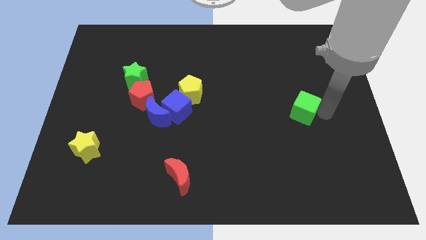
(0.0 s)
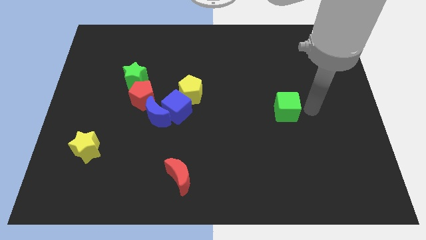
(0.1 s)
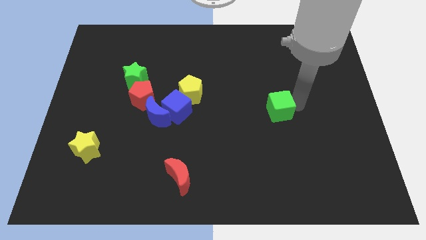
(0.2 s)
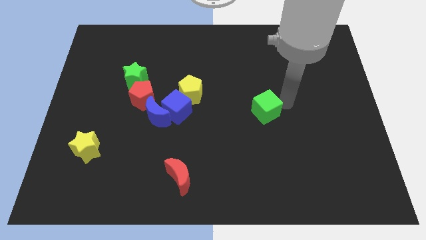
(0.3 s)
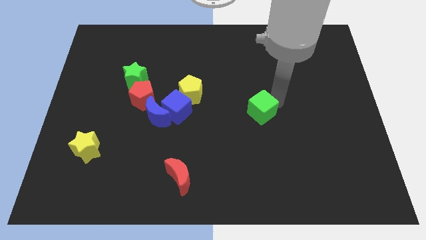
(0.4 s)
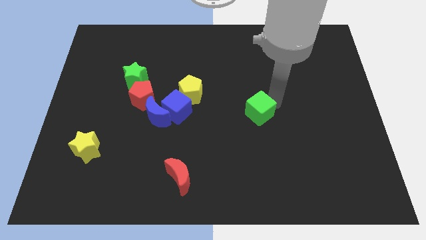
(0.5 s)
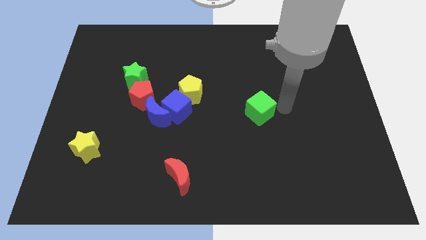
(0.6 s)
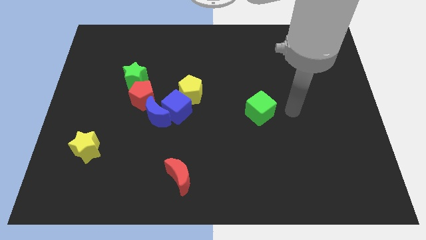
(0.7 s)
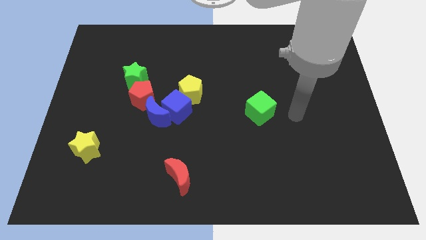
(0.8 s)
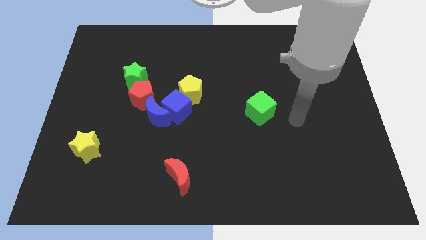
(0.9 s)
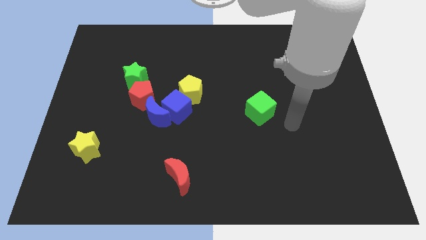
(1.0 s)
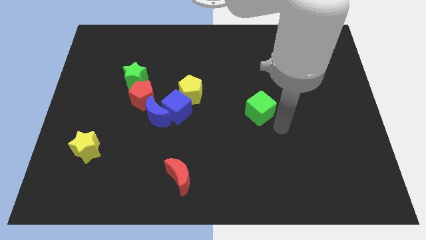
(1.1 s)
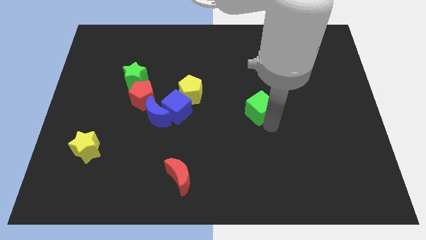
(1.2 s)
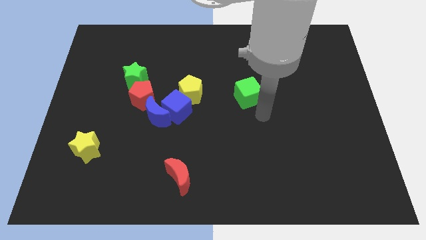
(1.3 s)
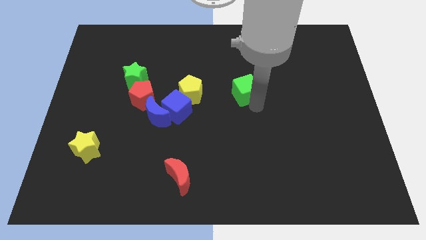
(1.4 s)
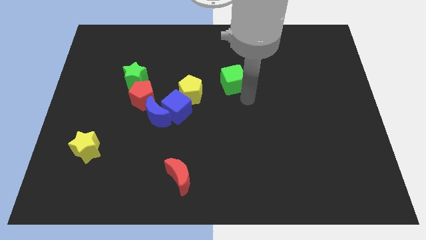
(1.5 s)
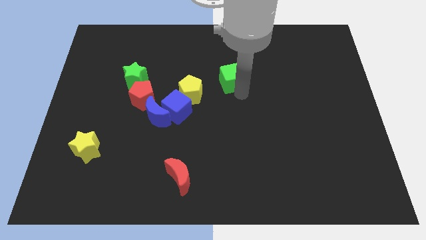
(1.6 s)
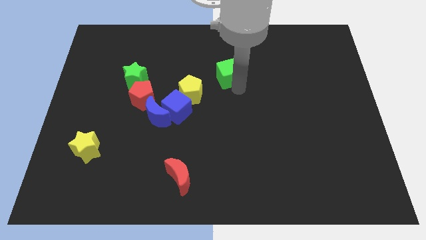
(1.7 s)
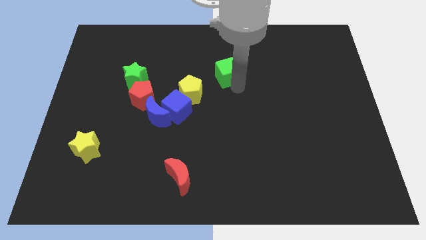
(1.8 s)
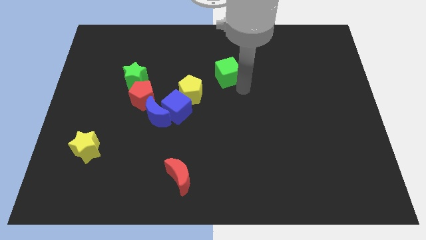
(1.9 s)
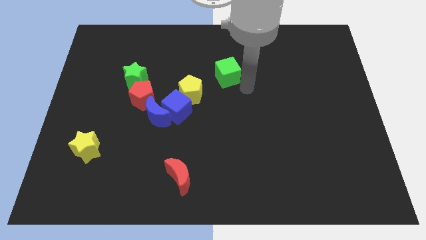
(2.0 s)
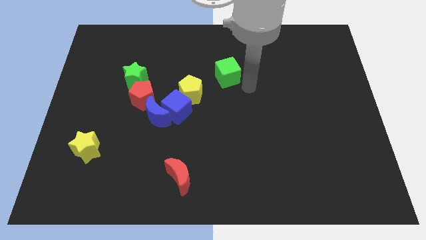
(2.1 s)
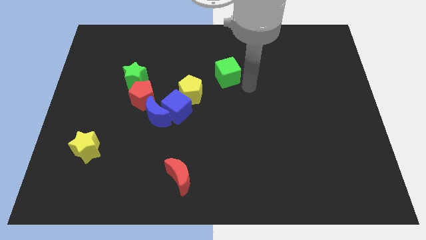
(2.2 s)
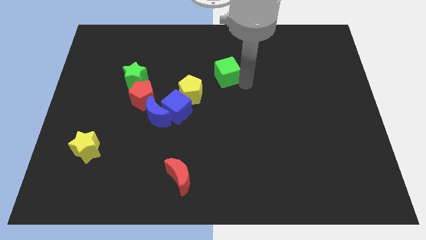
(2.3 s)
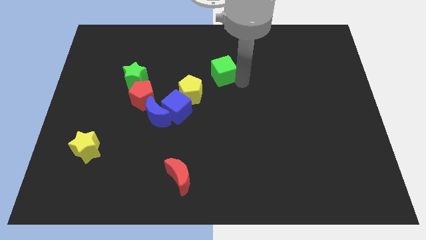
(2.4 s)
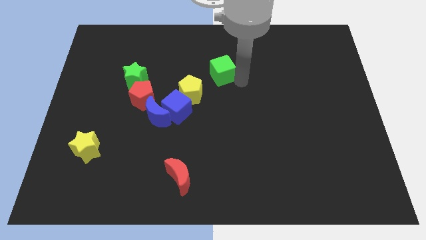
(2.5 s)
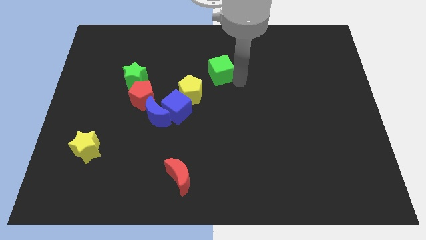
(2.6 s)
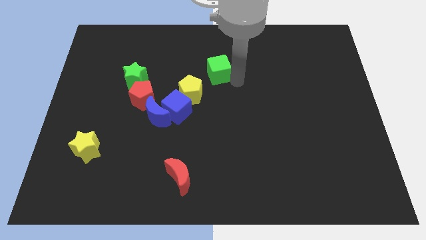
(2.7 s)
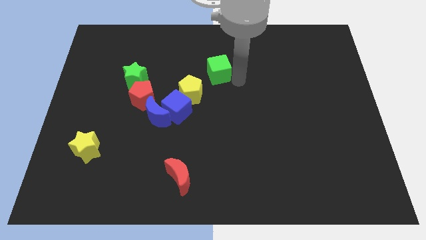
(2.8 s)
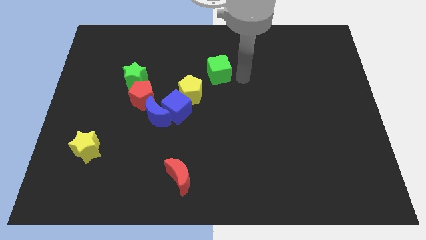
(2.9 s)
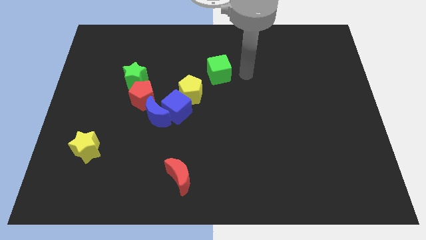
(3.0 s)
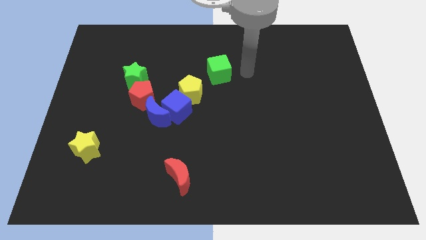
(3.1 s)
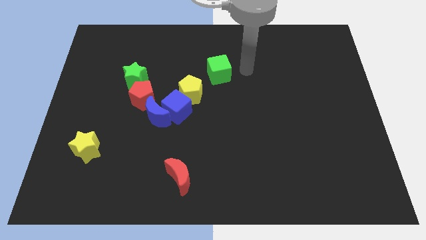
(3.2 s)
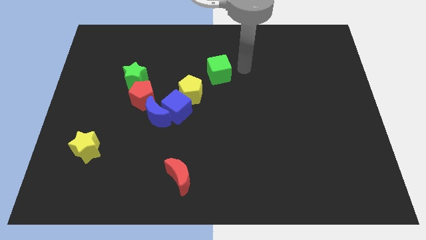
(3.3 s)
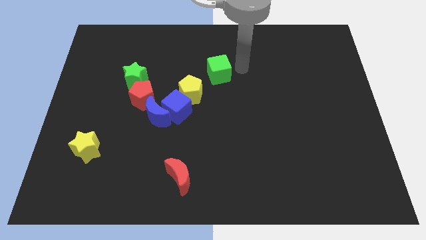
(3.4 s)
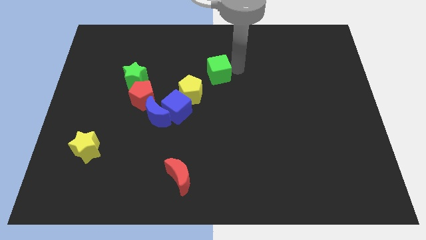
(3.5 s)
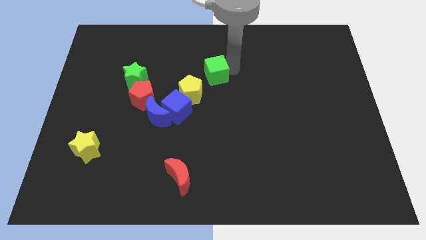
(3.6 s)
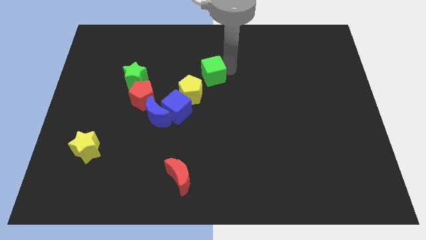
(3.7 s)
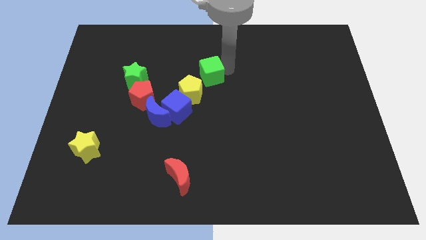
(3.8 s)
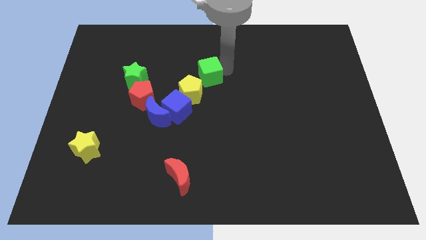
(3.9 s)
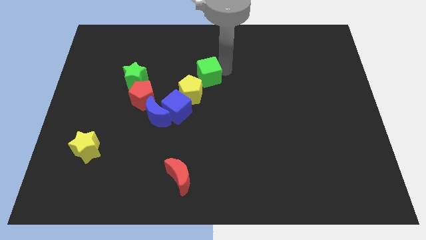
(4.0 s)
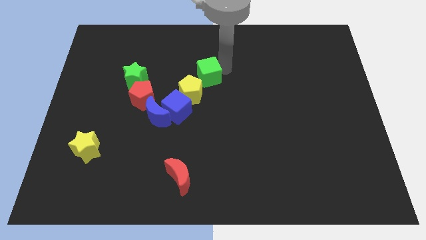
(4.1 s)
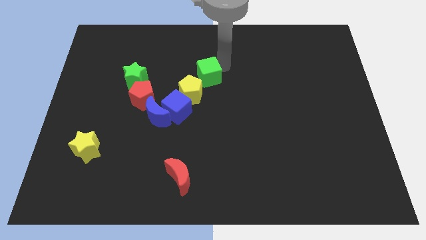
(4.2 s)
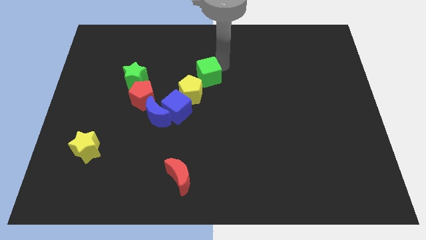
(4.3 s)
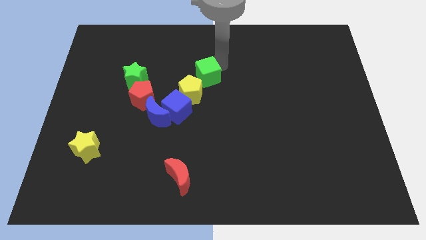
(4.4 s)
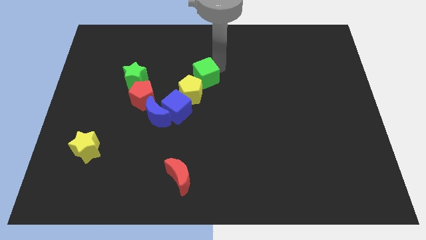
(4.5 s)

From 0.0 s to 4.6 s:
place the green cube above the yellow pentagon

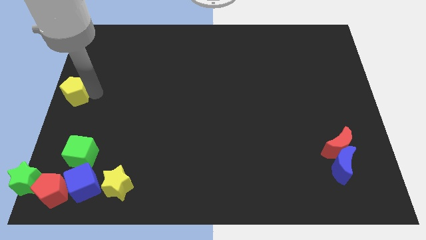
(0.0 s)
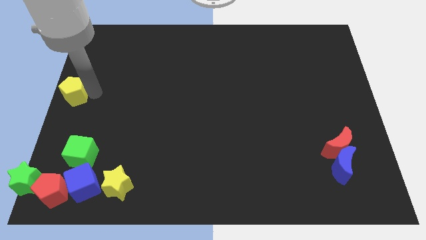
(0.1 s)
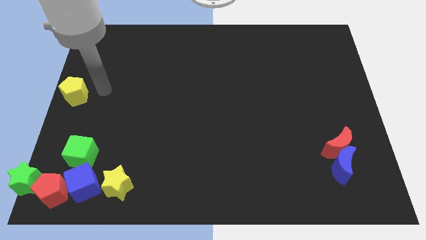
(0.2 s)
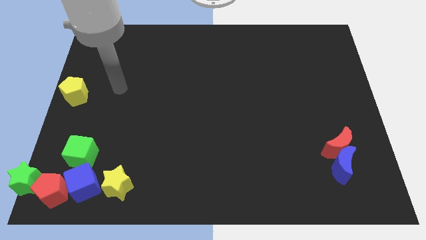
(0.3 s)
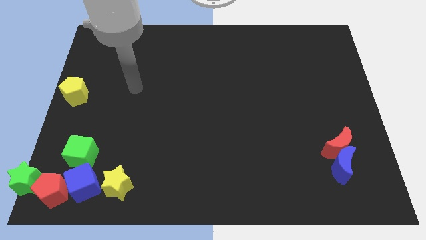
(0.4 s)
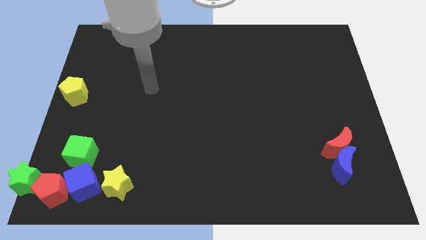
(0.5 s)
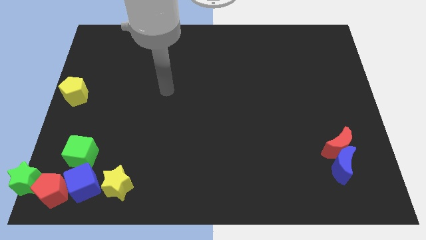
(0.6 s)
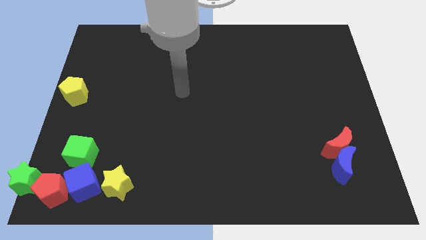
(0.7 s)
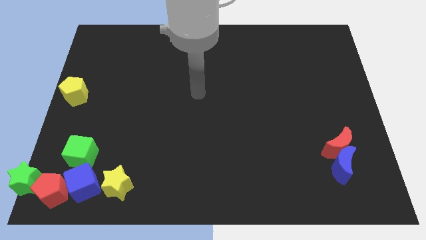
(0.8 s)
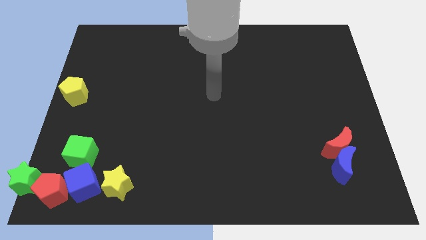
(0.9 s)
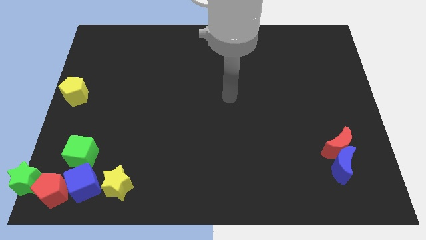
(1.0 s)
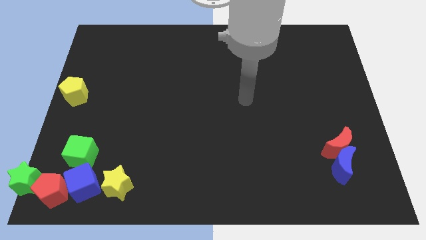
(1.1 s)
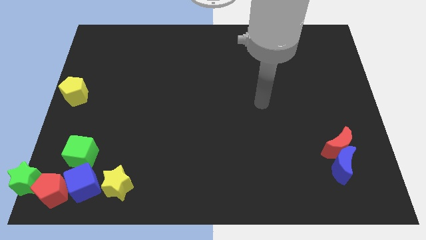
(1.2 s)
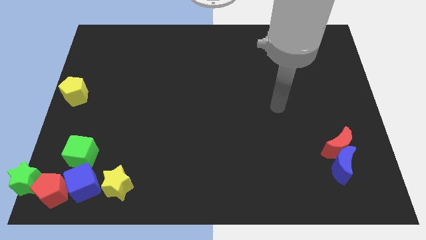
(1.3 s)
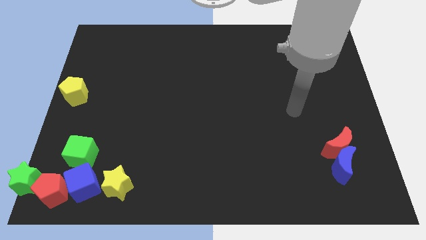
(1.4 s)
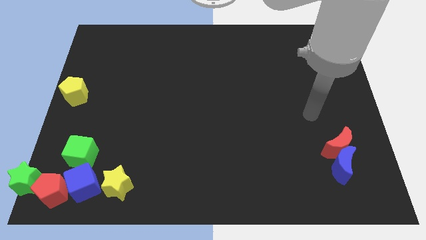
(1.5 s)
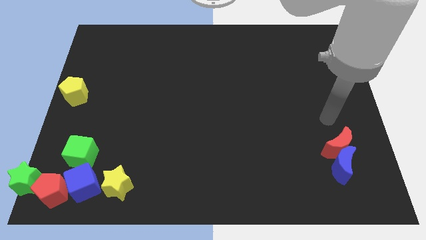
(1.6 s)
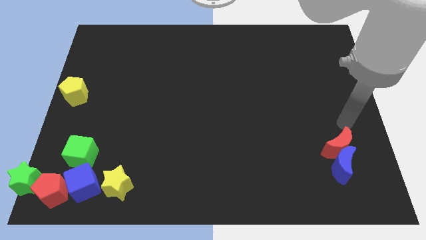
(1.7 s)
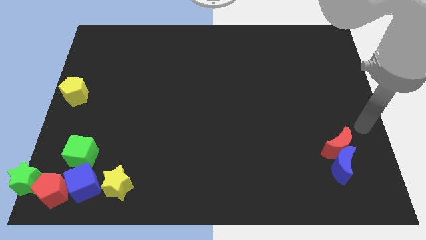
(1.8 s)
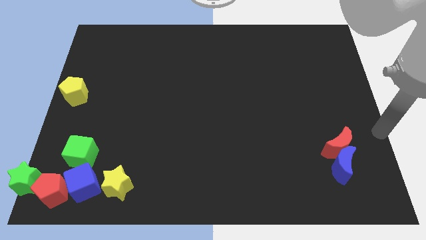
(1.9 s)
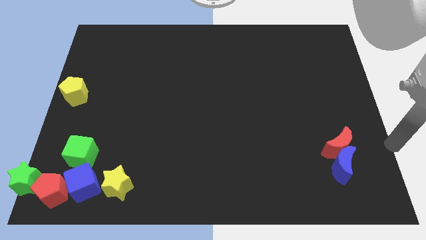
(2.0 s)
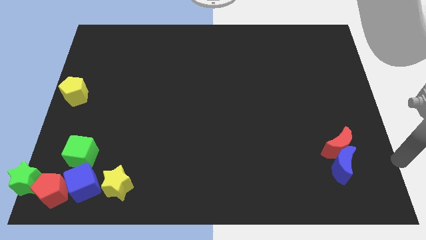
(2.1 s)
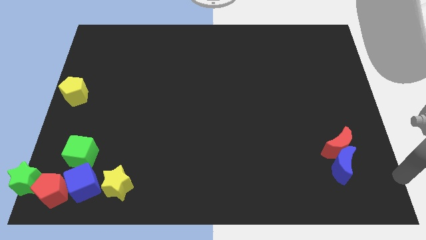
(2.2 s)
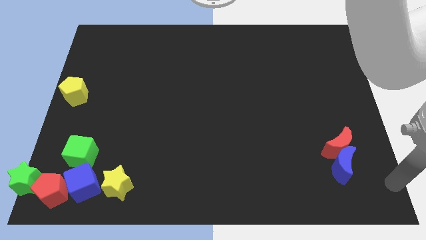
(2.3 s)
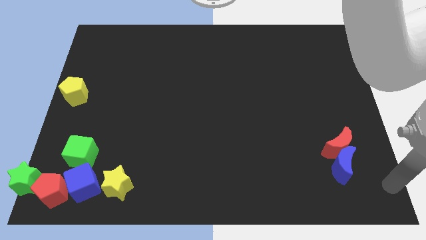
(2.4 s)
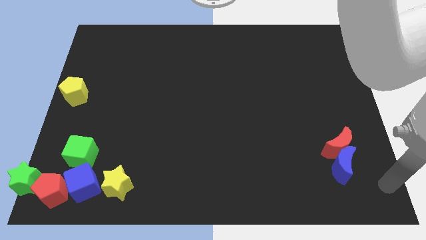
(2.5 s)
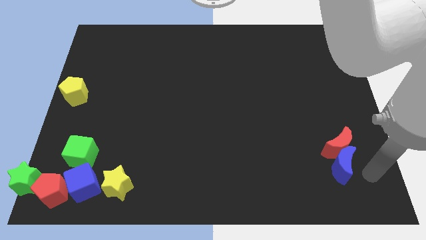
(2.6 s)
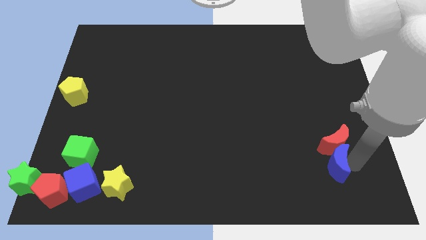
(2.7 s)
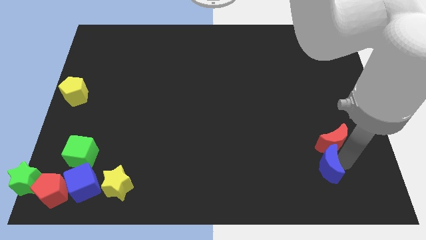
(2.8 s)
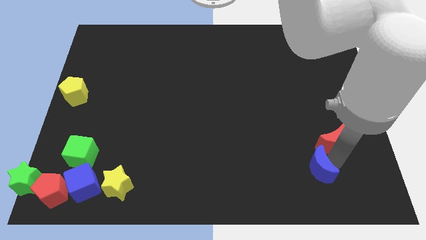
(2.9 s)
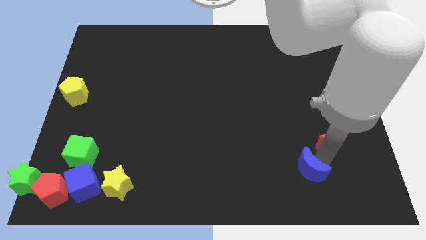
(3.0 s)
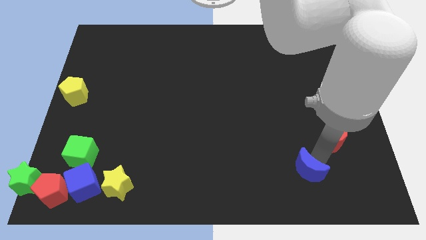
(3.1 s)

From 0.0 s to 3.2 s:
move your arm into the blue crescent

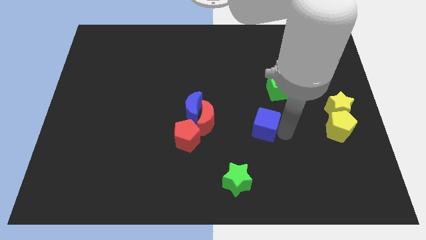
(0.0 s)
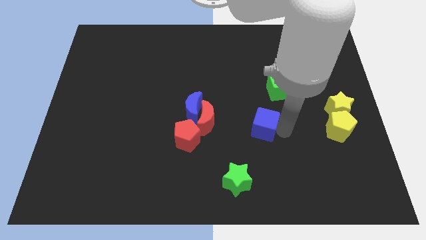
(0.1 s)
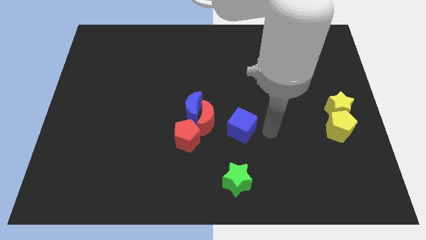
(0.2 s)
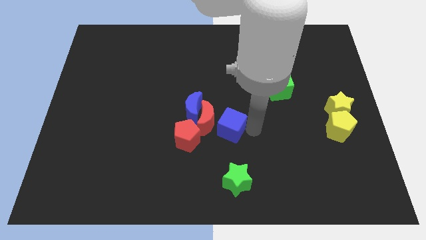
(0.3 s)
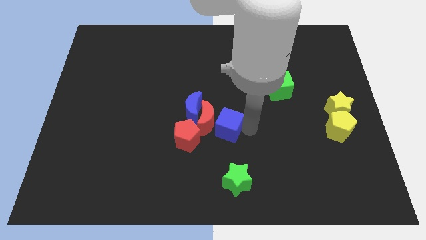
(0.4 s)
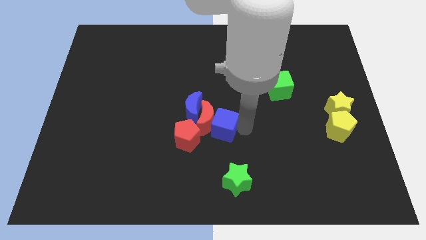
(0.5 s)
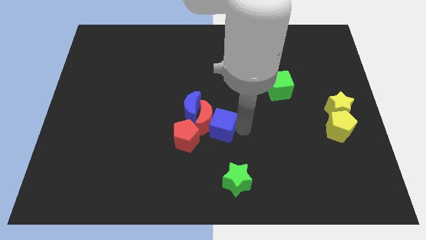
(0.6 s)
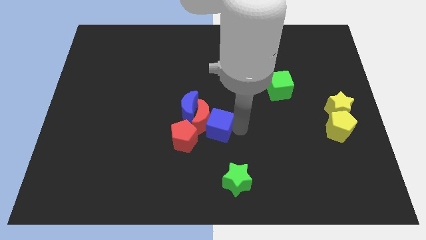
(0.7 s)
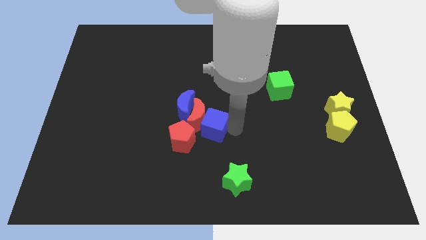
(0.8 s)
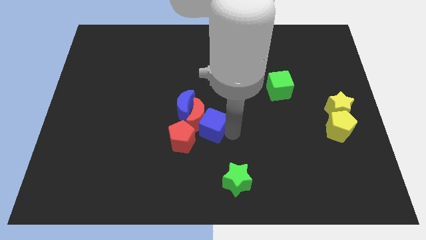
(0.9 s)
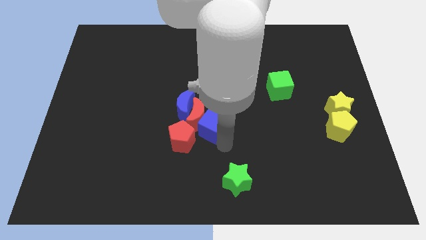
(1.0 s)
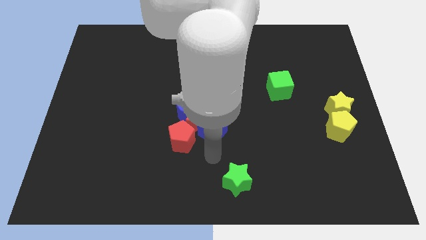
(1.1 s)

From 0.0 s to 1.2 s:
push the blue cube into the red crescent

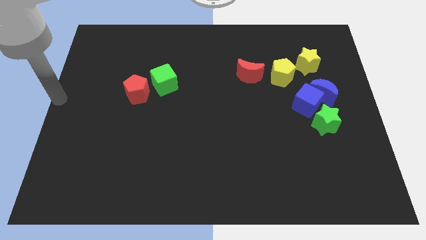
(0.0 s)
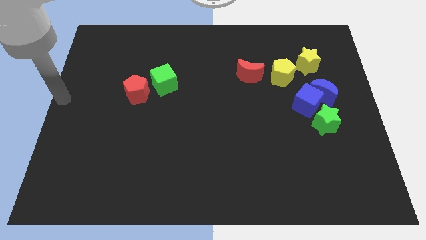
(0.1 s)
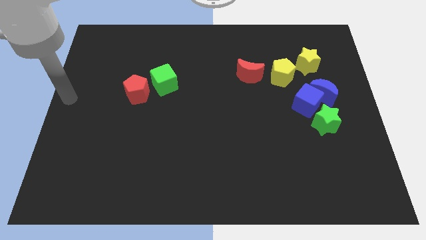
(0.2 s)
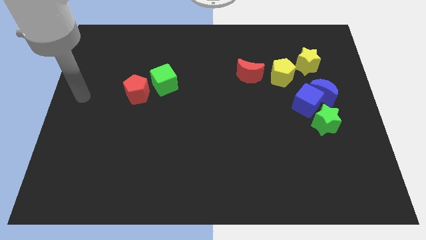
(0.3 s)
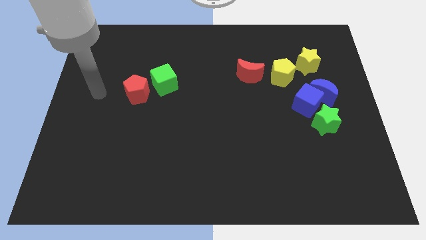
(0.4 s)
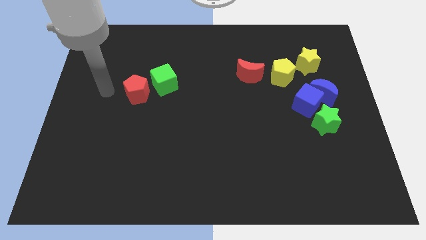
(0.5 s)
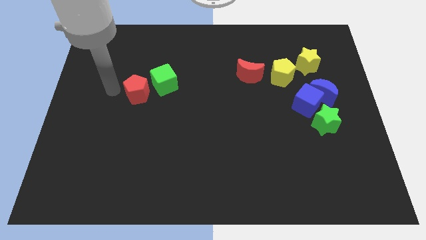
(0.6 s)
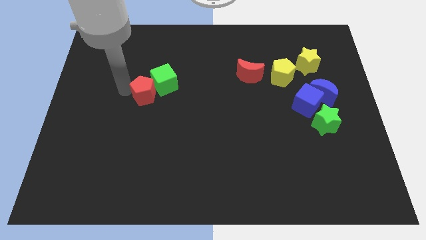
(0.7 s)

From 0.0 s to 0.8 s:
touch the red pentagon on left side
